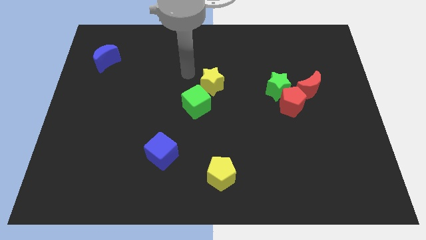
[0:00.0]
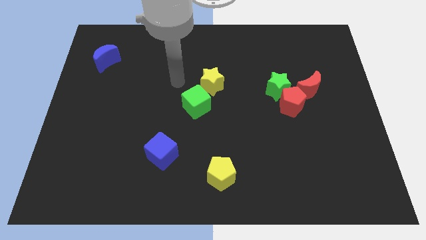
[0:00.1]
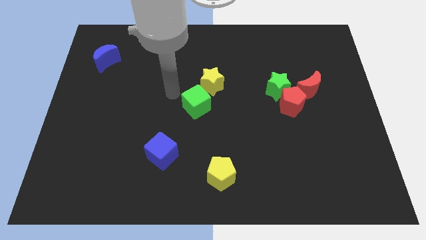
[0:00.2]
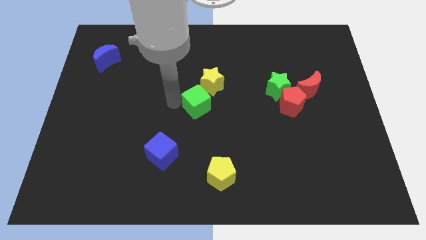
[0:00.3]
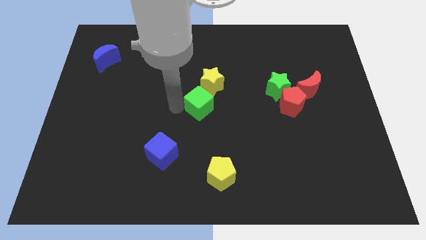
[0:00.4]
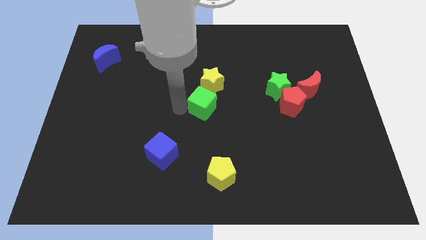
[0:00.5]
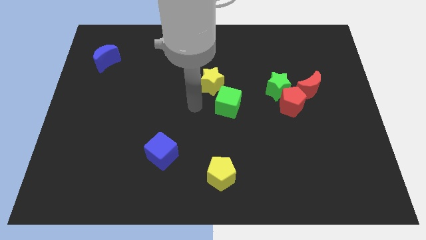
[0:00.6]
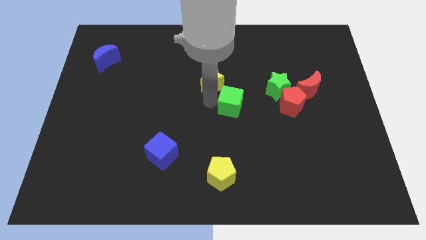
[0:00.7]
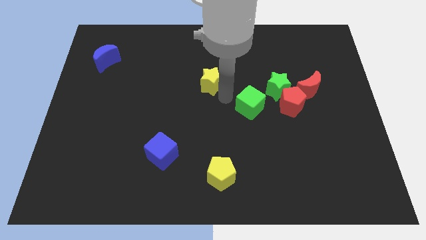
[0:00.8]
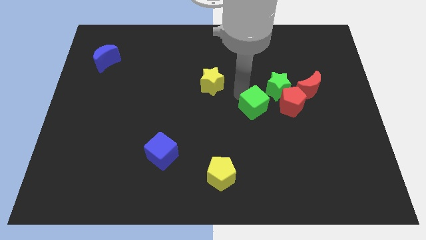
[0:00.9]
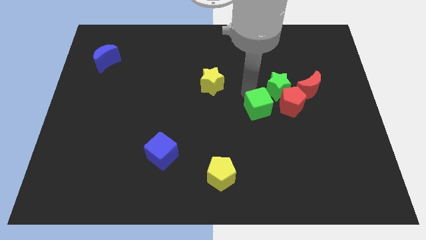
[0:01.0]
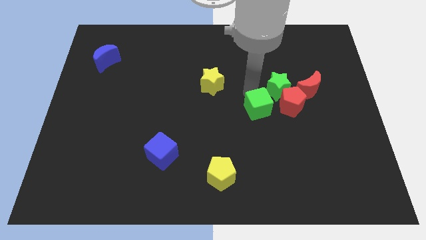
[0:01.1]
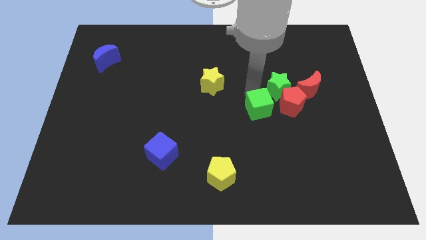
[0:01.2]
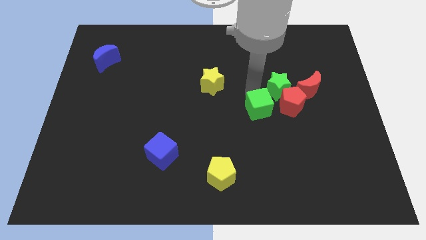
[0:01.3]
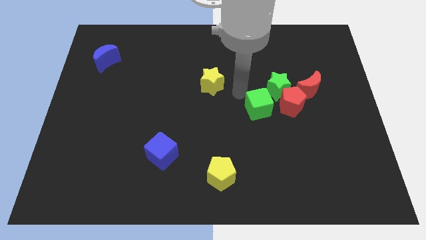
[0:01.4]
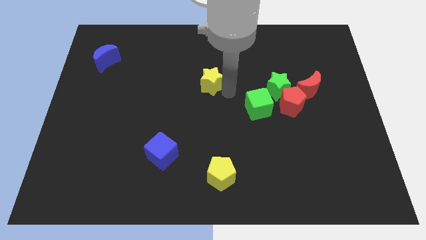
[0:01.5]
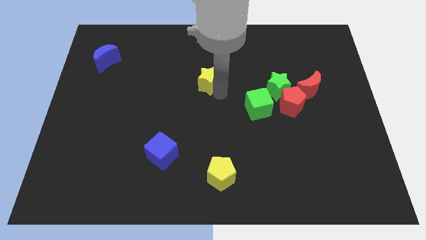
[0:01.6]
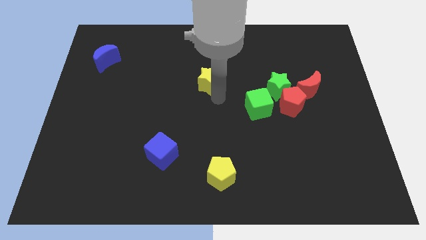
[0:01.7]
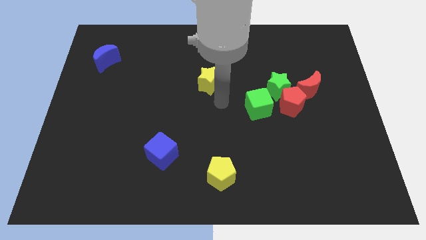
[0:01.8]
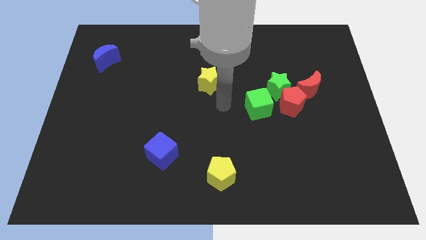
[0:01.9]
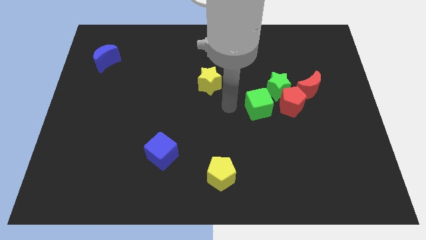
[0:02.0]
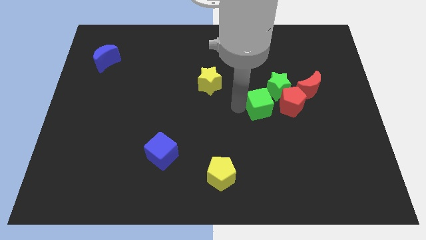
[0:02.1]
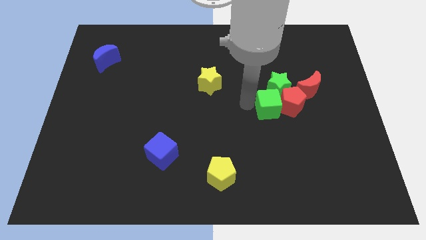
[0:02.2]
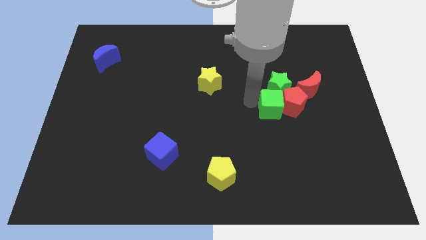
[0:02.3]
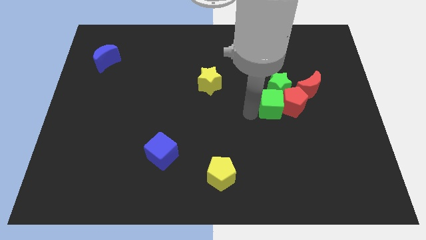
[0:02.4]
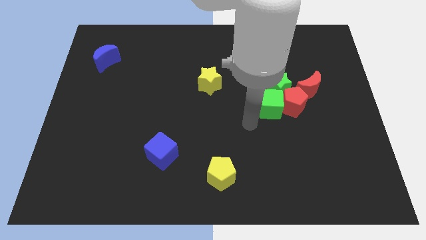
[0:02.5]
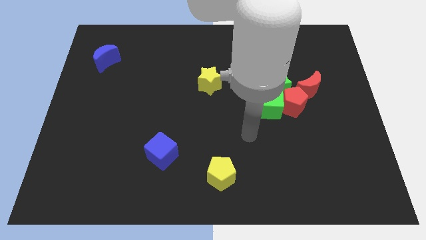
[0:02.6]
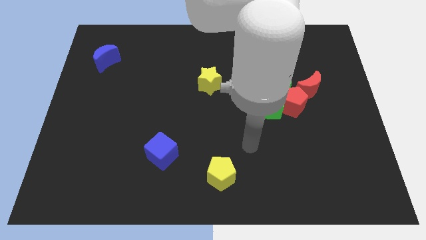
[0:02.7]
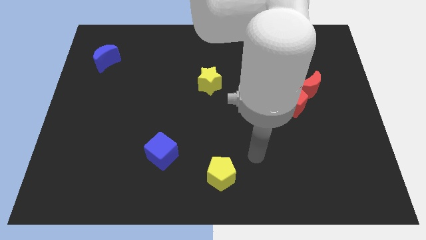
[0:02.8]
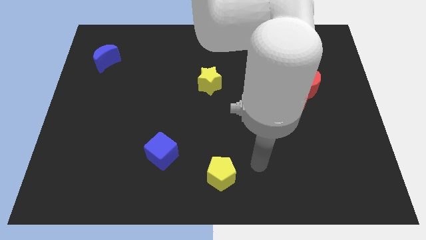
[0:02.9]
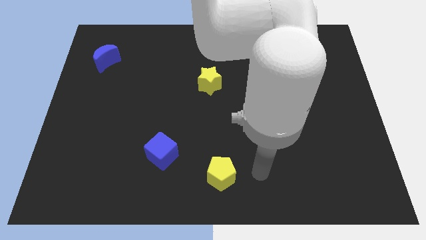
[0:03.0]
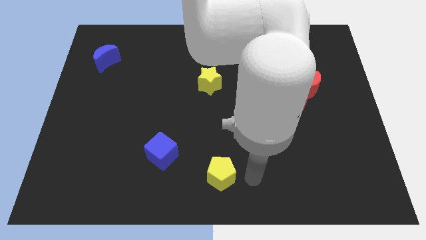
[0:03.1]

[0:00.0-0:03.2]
move the green cube at the bottom of the green star

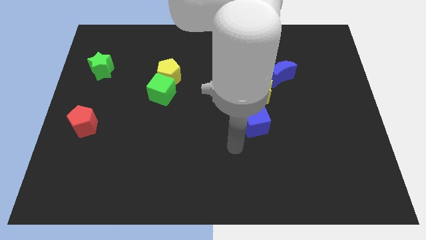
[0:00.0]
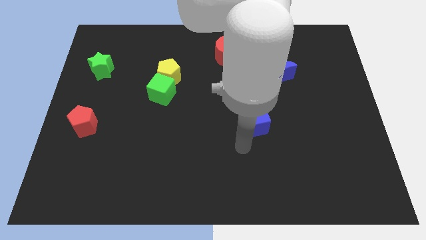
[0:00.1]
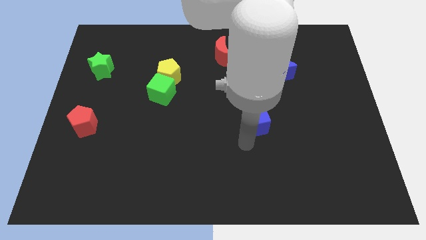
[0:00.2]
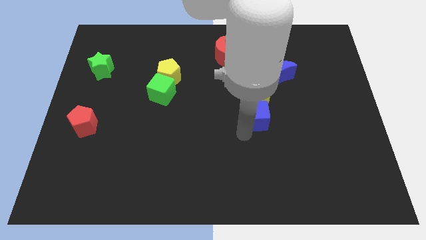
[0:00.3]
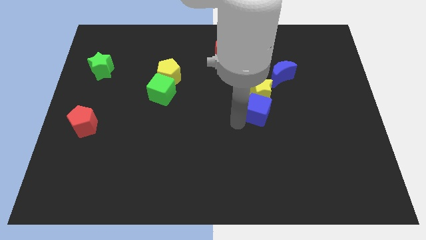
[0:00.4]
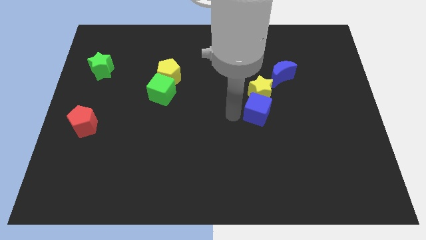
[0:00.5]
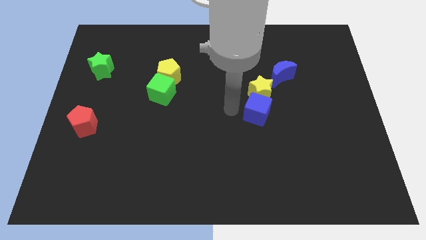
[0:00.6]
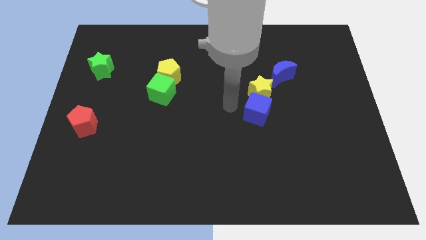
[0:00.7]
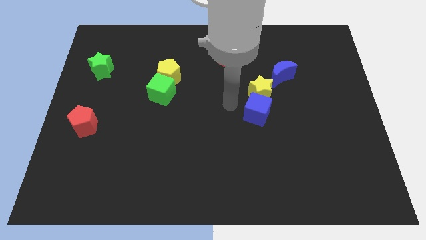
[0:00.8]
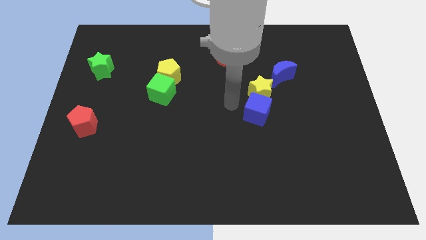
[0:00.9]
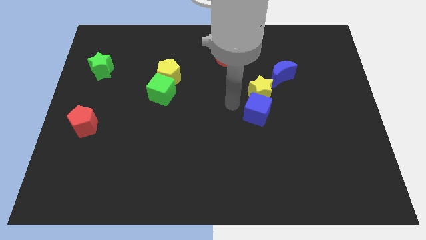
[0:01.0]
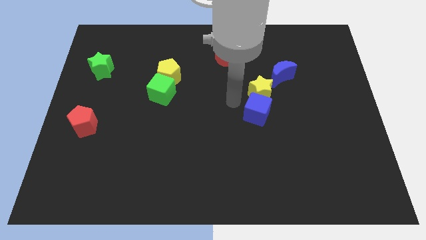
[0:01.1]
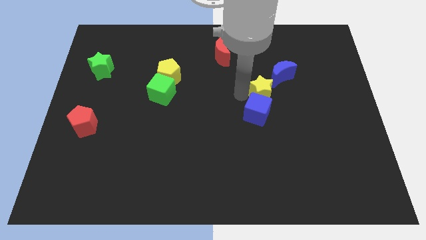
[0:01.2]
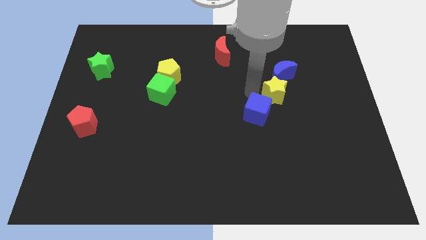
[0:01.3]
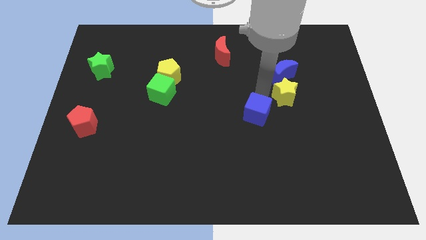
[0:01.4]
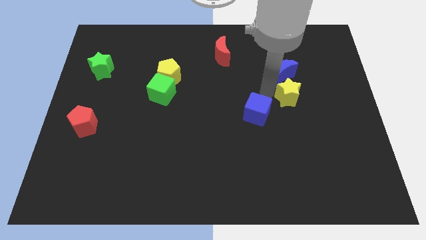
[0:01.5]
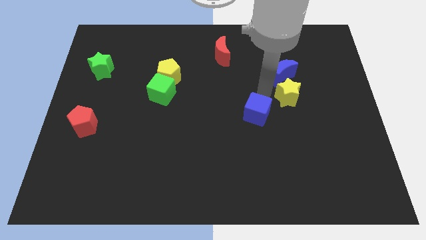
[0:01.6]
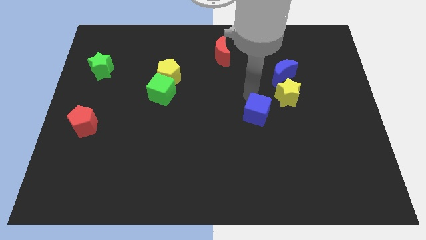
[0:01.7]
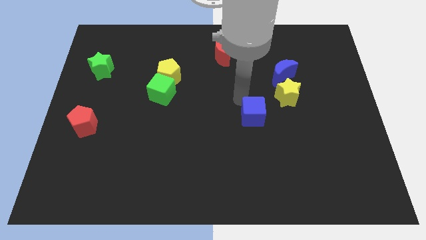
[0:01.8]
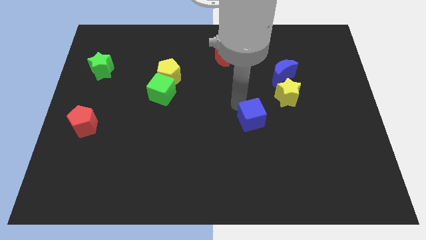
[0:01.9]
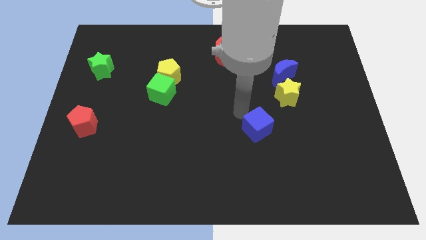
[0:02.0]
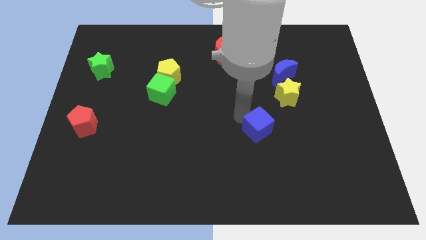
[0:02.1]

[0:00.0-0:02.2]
push the yellow star slightly towards the right

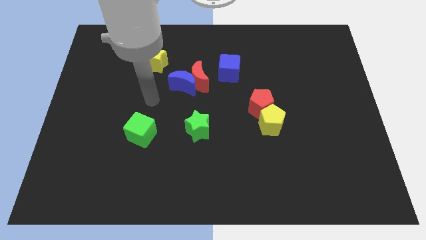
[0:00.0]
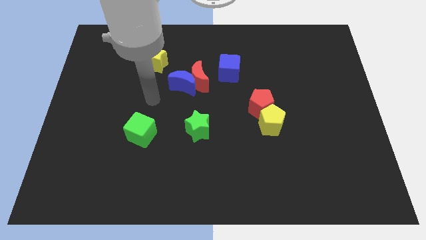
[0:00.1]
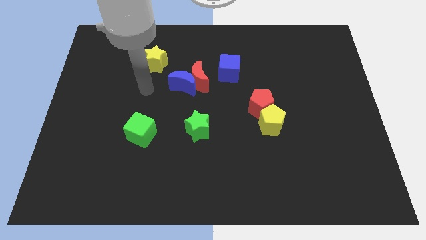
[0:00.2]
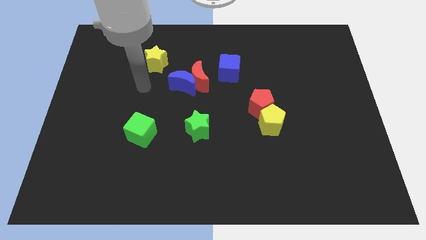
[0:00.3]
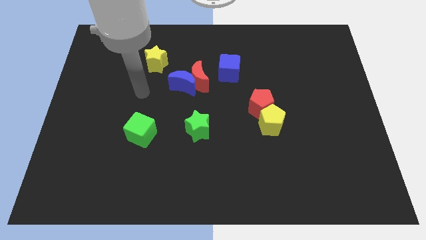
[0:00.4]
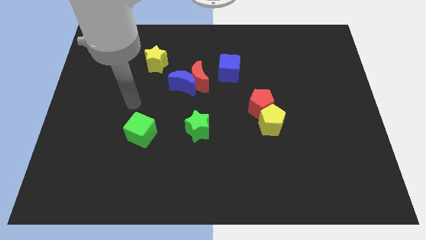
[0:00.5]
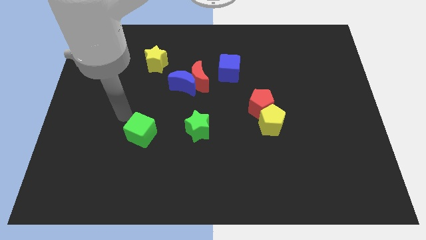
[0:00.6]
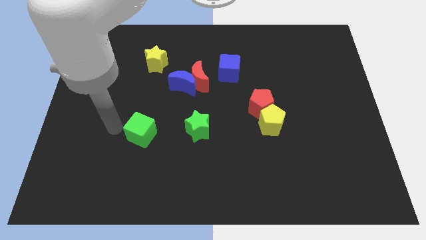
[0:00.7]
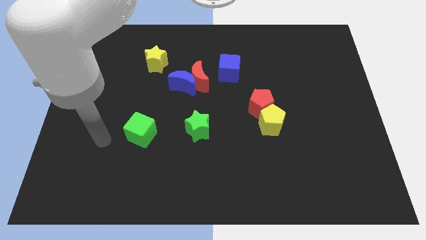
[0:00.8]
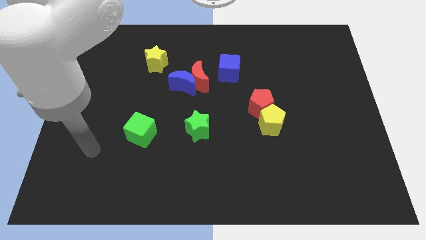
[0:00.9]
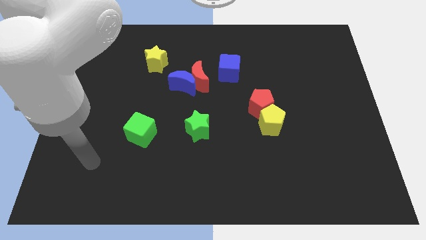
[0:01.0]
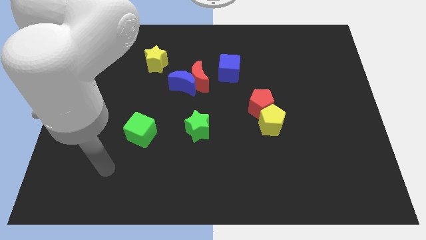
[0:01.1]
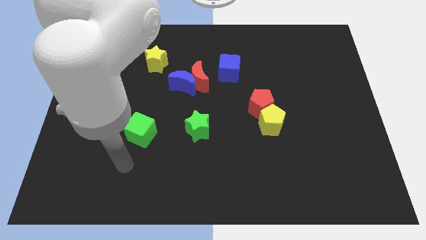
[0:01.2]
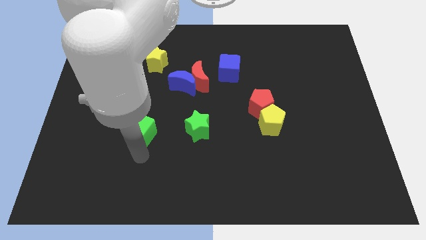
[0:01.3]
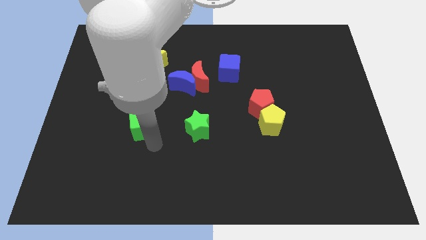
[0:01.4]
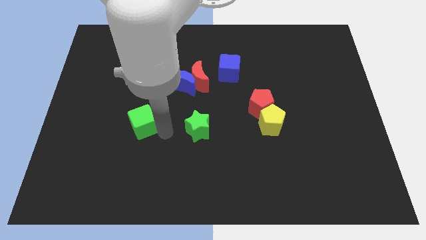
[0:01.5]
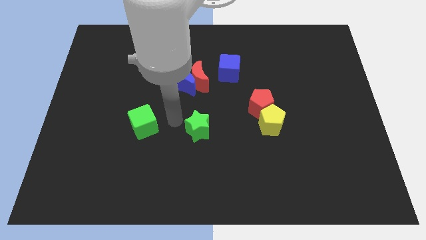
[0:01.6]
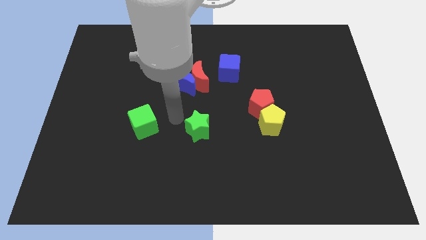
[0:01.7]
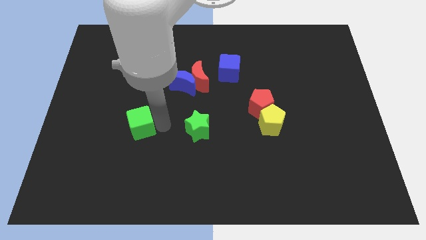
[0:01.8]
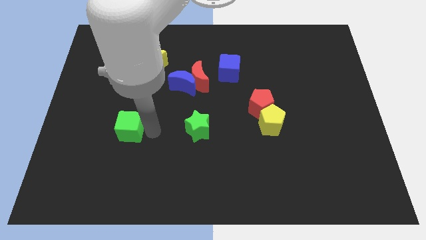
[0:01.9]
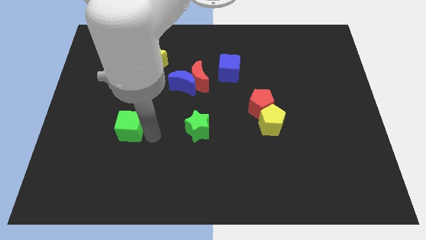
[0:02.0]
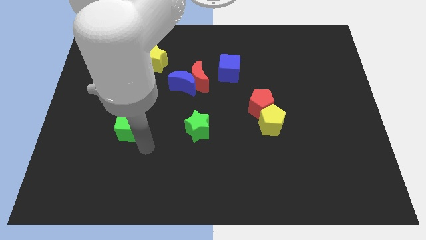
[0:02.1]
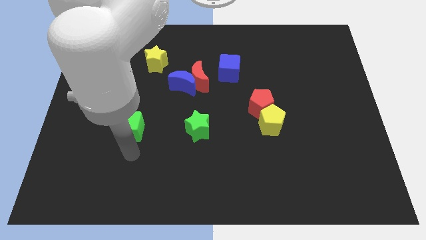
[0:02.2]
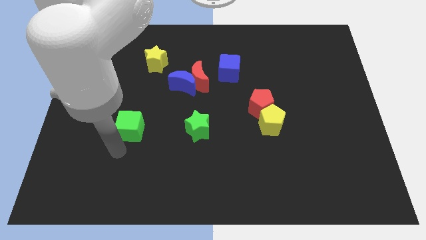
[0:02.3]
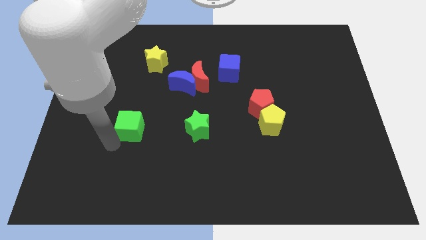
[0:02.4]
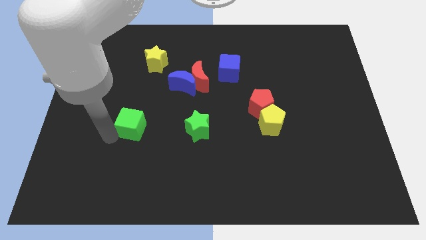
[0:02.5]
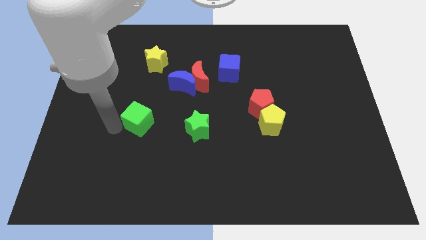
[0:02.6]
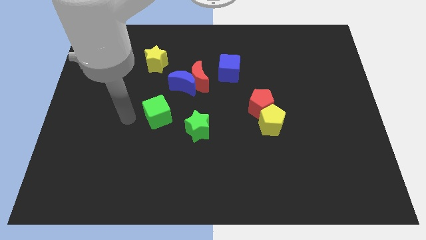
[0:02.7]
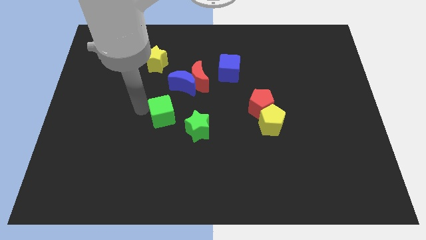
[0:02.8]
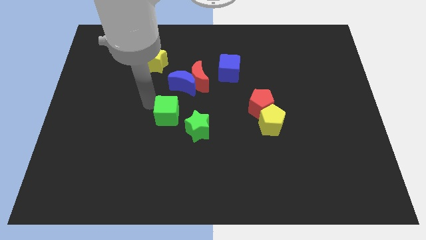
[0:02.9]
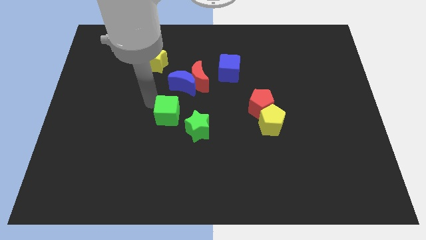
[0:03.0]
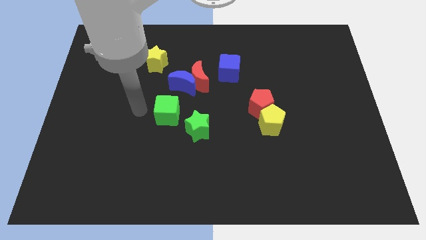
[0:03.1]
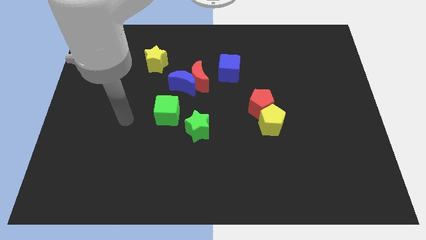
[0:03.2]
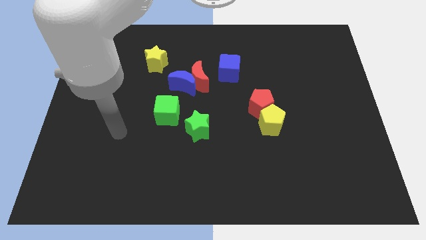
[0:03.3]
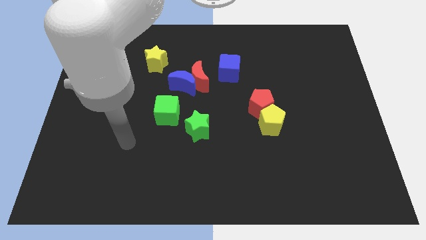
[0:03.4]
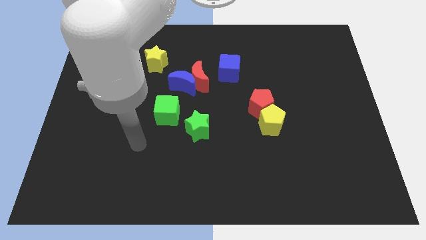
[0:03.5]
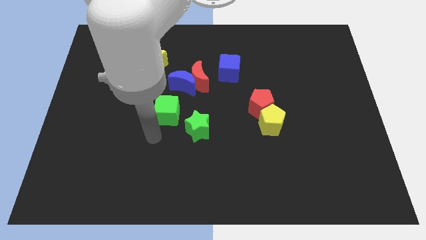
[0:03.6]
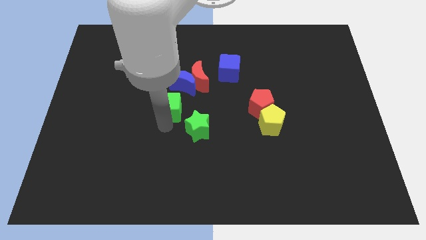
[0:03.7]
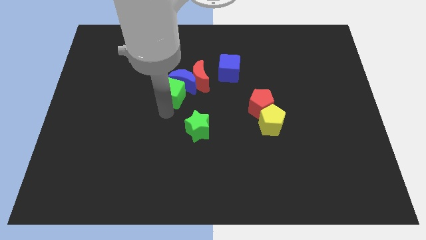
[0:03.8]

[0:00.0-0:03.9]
slide the green cube diagonally top left to the green star
